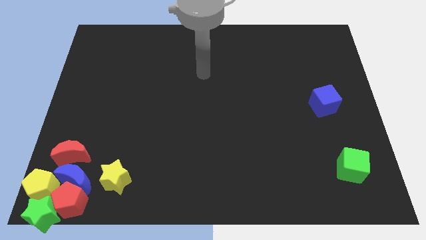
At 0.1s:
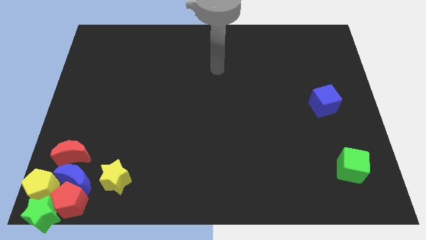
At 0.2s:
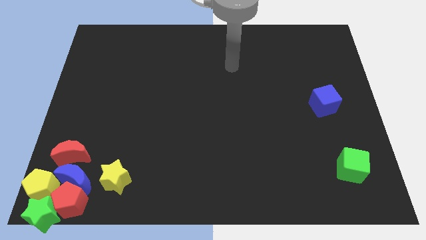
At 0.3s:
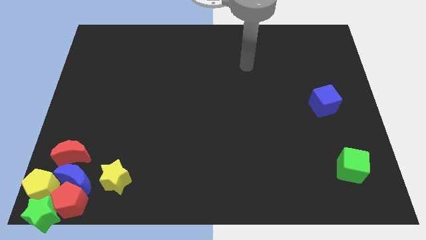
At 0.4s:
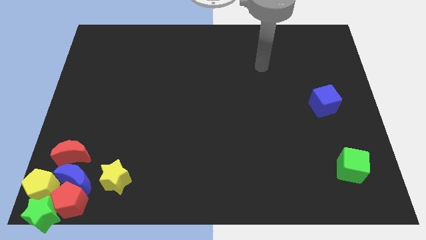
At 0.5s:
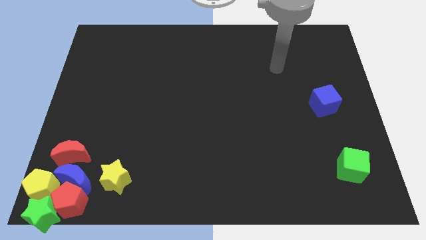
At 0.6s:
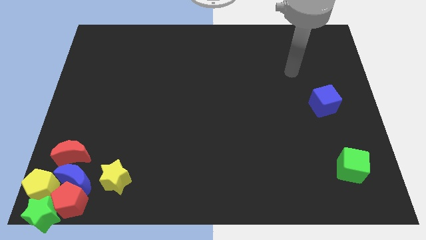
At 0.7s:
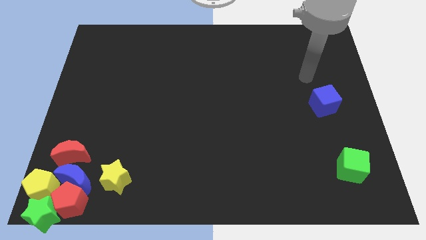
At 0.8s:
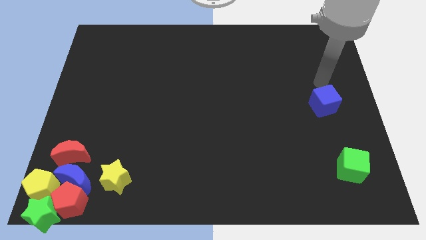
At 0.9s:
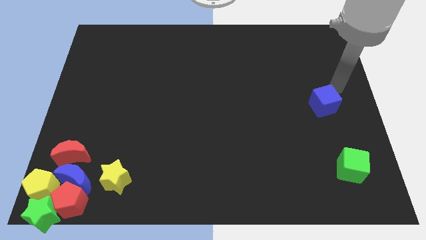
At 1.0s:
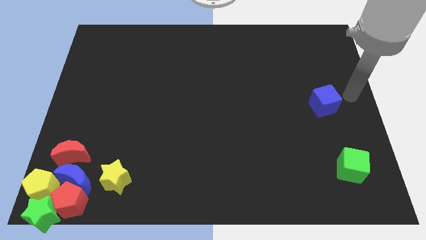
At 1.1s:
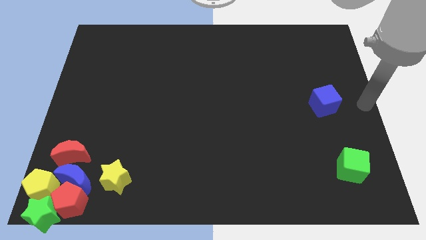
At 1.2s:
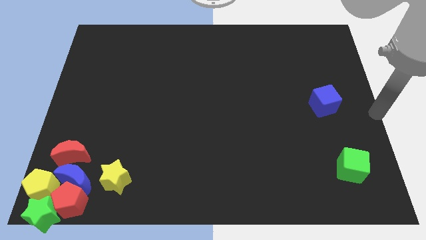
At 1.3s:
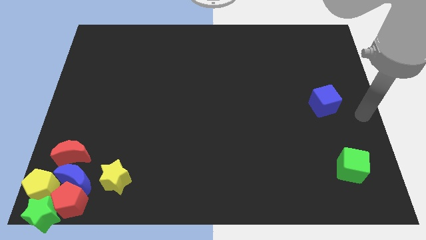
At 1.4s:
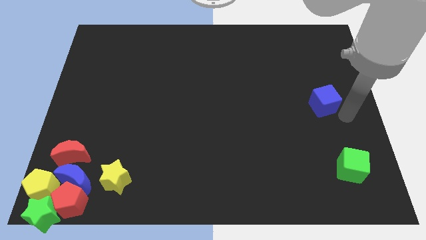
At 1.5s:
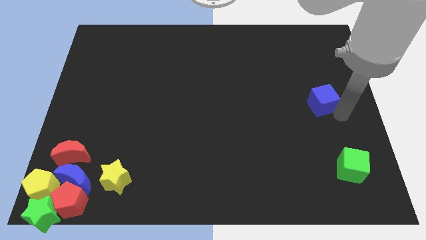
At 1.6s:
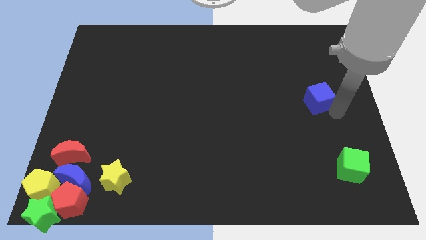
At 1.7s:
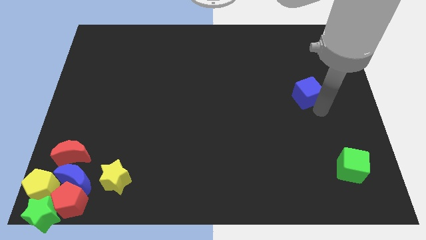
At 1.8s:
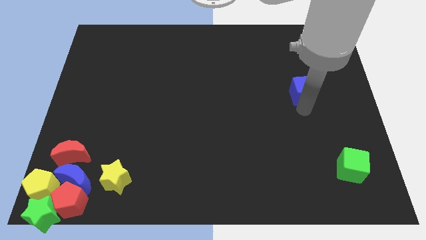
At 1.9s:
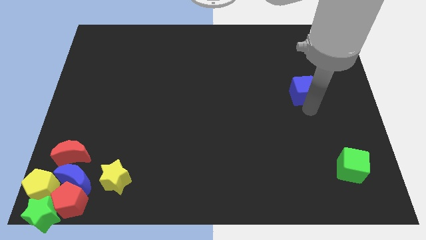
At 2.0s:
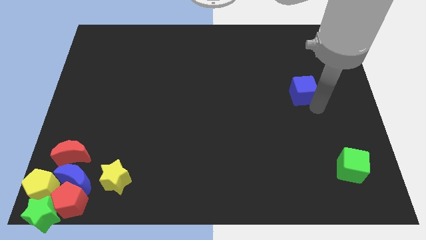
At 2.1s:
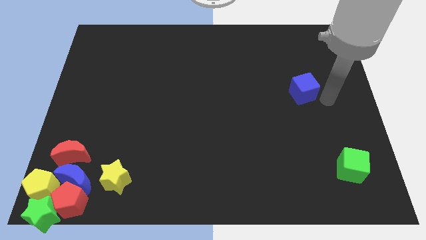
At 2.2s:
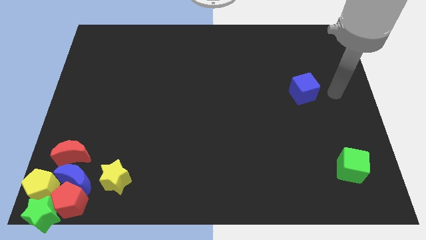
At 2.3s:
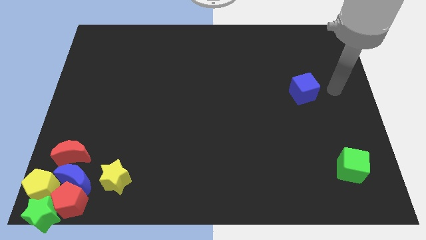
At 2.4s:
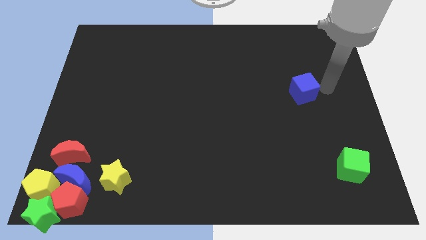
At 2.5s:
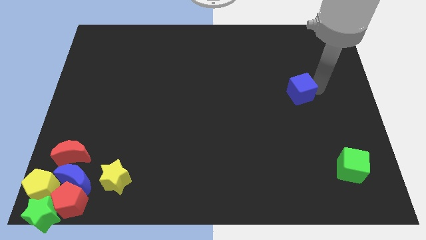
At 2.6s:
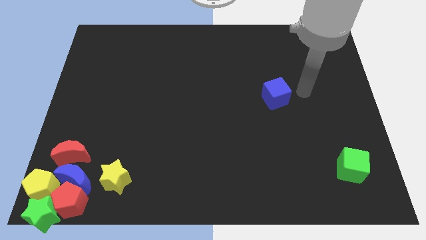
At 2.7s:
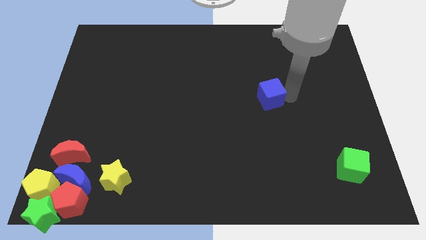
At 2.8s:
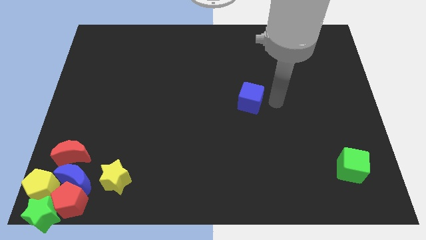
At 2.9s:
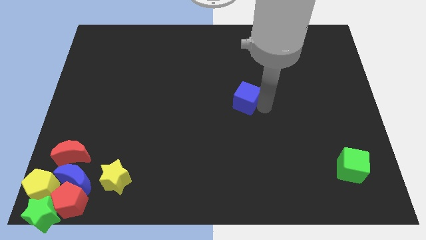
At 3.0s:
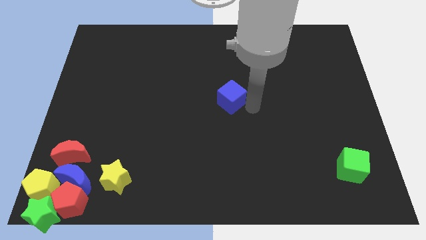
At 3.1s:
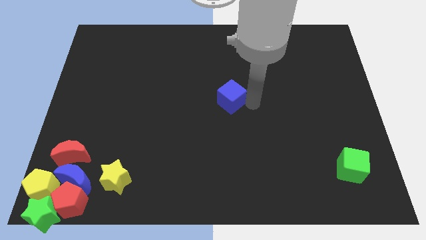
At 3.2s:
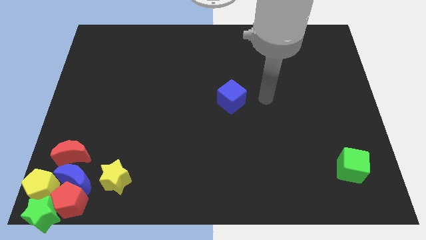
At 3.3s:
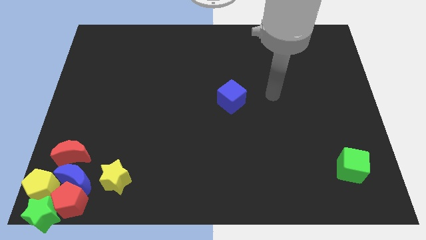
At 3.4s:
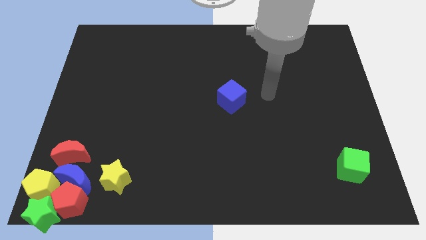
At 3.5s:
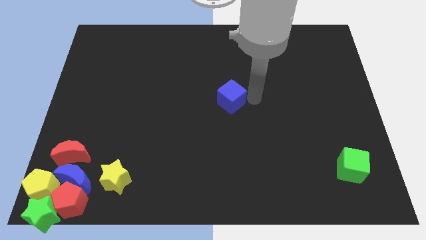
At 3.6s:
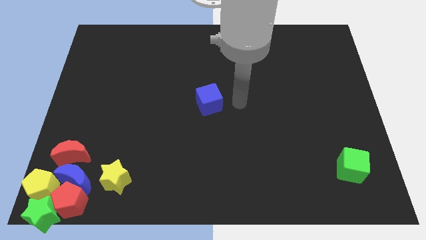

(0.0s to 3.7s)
push the blue cube to the center

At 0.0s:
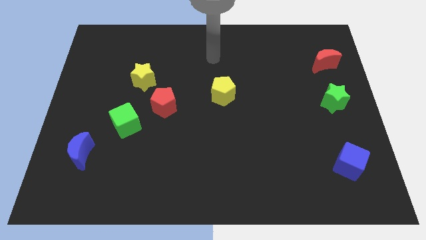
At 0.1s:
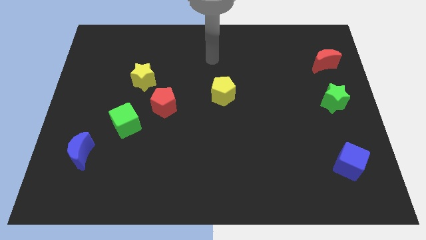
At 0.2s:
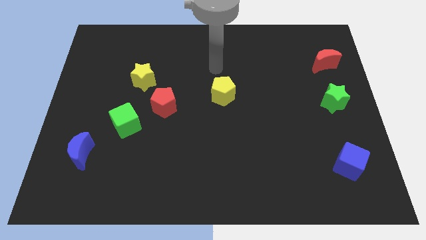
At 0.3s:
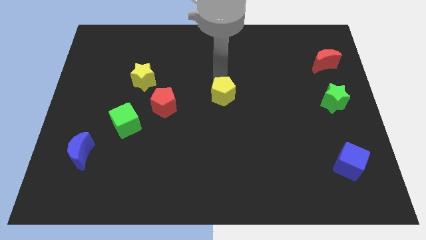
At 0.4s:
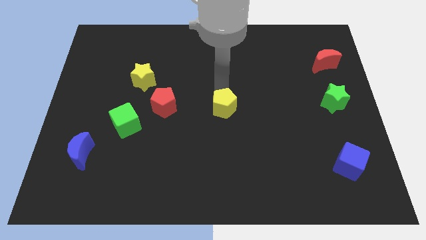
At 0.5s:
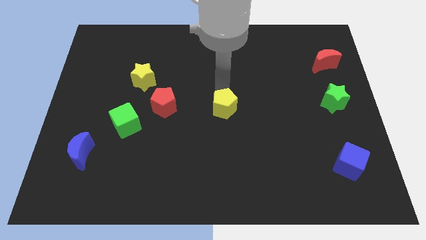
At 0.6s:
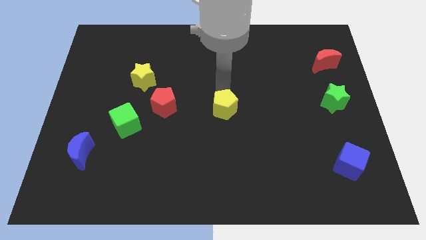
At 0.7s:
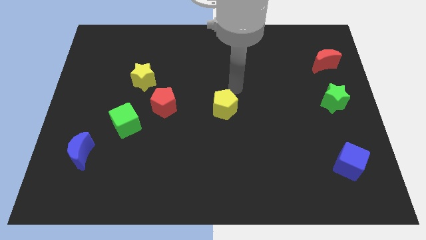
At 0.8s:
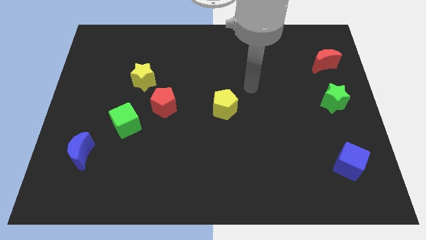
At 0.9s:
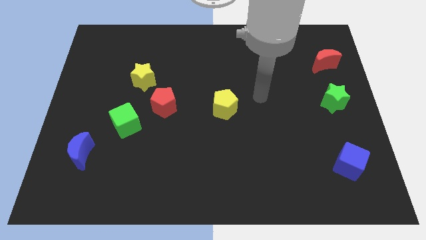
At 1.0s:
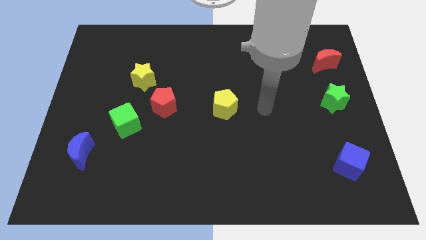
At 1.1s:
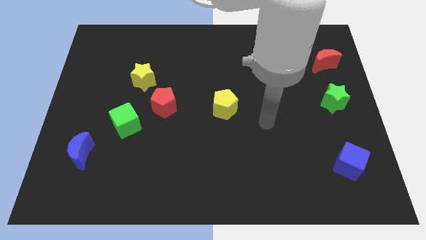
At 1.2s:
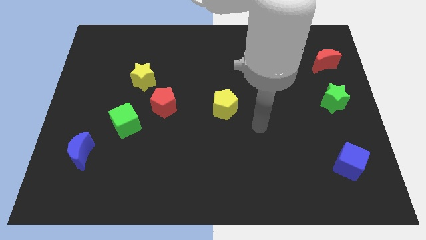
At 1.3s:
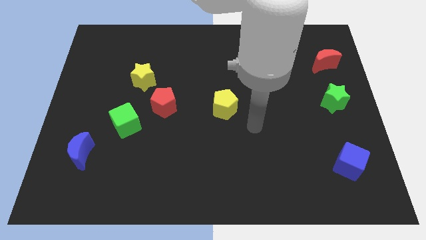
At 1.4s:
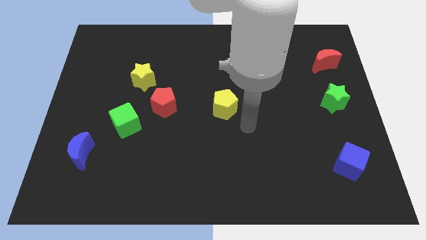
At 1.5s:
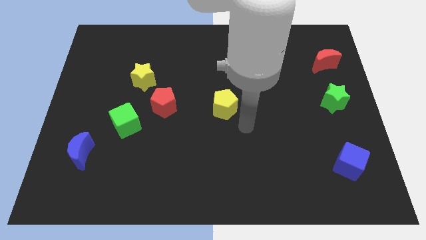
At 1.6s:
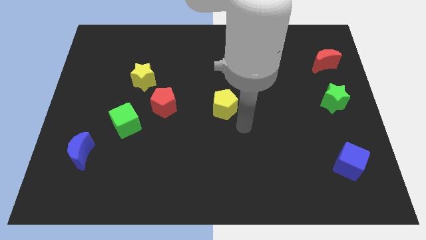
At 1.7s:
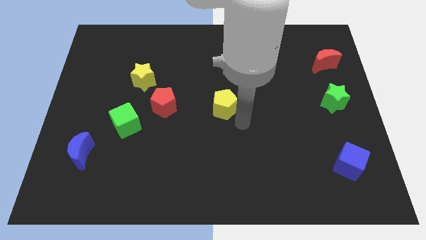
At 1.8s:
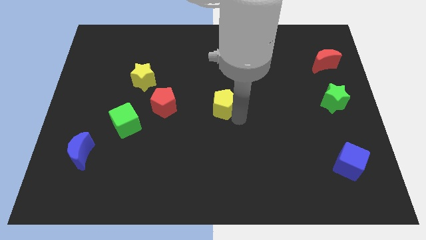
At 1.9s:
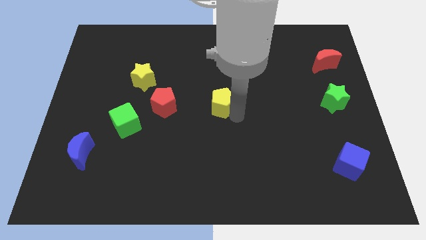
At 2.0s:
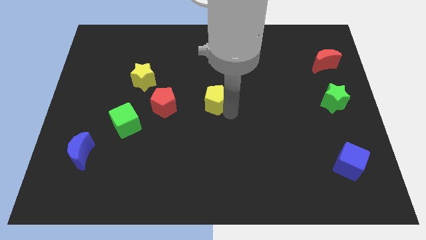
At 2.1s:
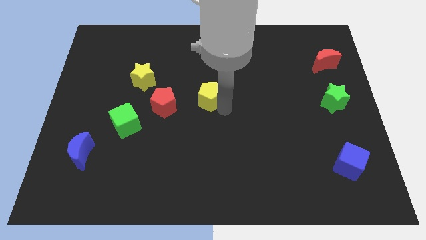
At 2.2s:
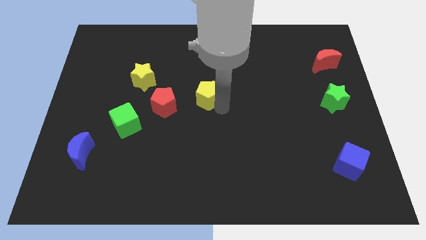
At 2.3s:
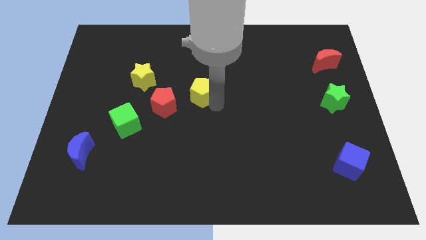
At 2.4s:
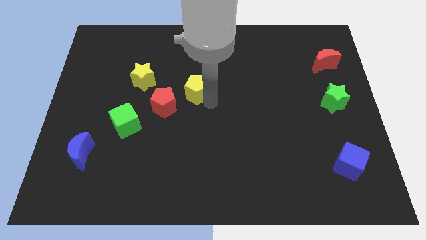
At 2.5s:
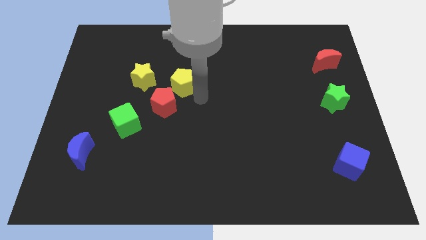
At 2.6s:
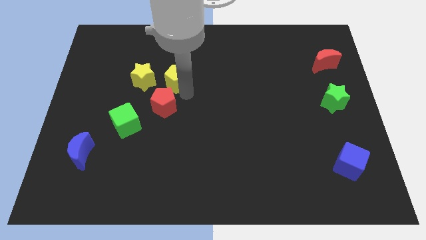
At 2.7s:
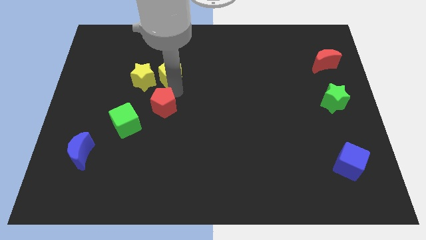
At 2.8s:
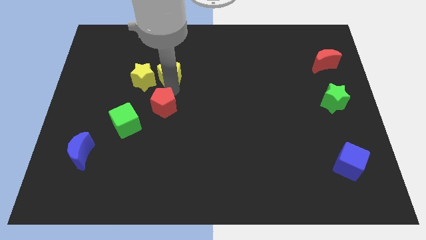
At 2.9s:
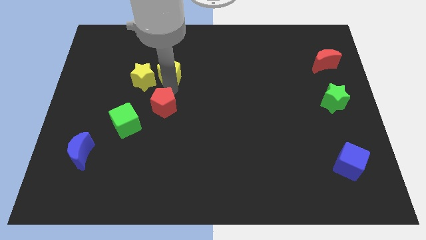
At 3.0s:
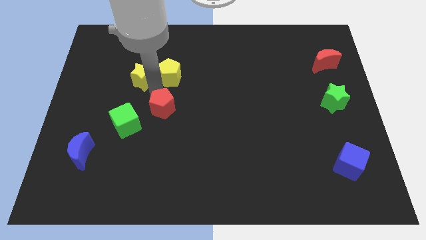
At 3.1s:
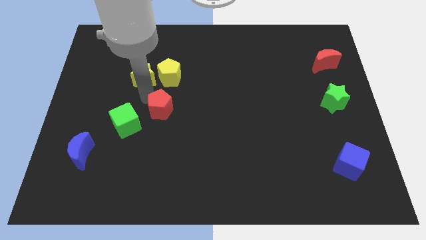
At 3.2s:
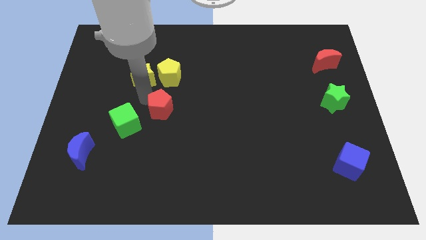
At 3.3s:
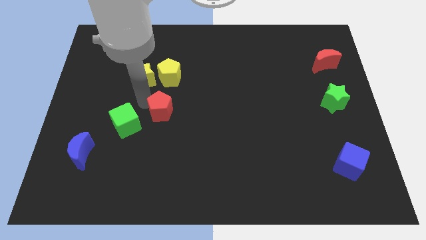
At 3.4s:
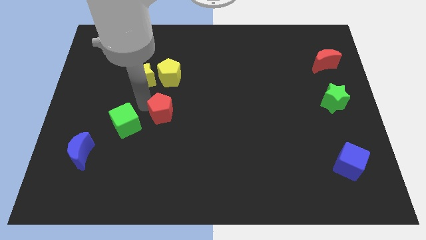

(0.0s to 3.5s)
move the yellow pentagon to the left

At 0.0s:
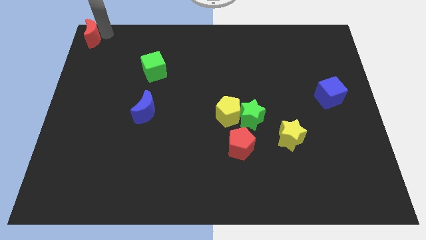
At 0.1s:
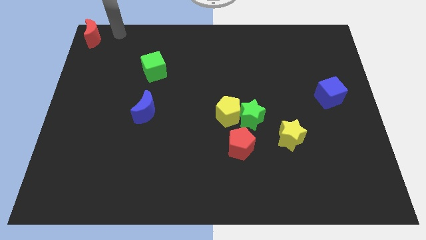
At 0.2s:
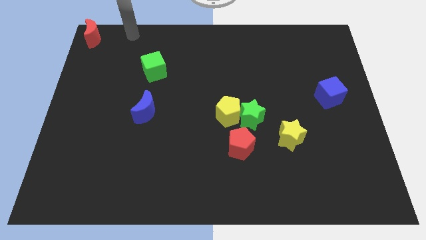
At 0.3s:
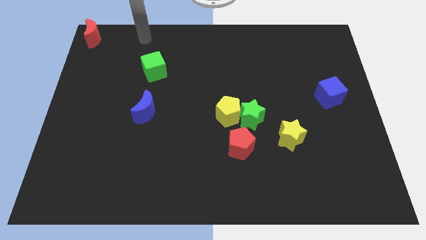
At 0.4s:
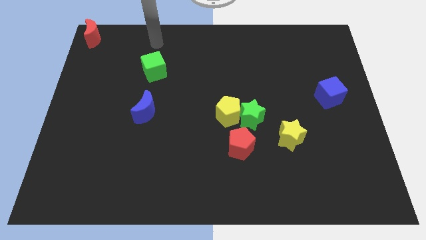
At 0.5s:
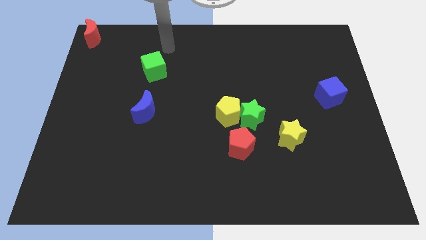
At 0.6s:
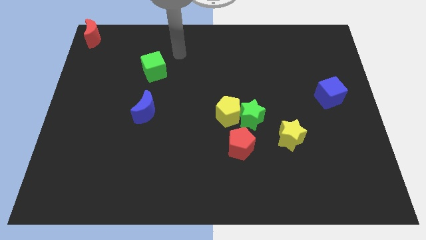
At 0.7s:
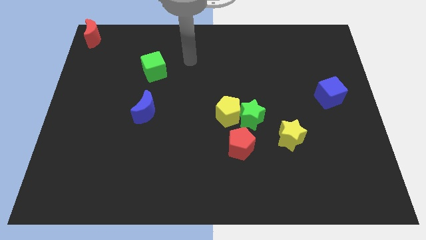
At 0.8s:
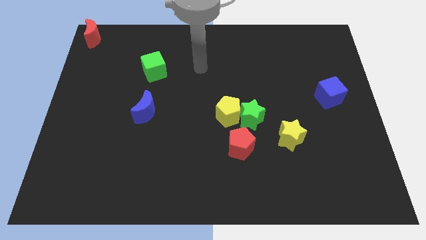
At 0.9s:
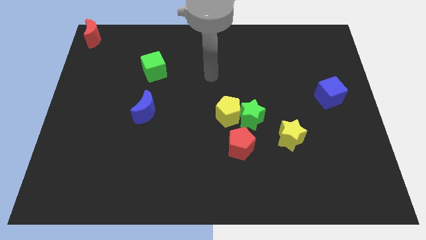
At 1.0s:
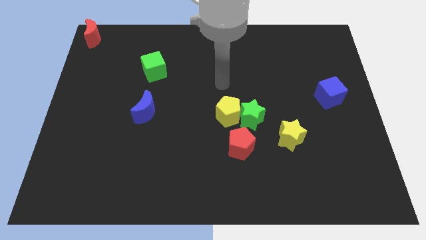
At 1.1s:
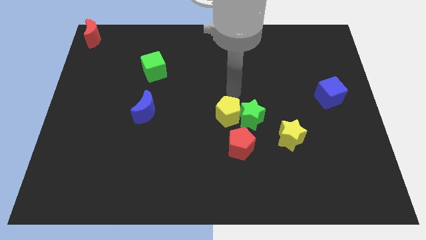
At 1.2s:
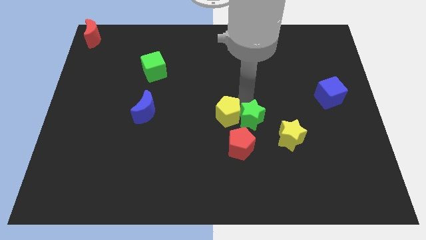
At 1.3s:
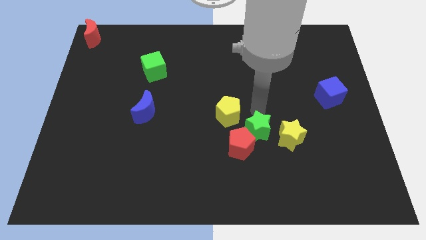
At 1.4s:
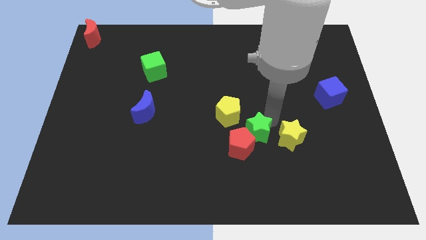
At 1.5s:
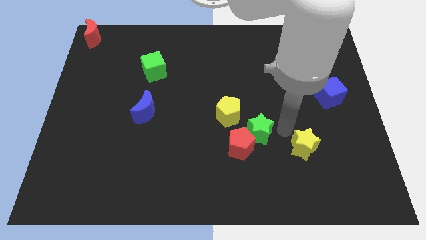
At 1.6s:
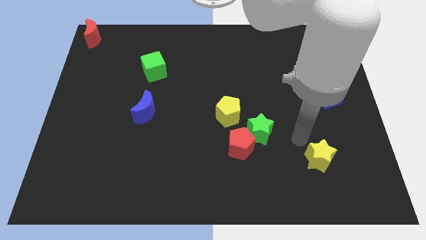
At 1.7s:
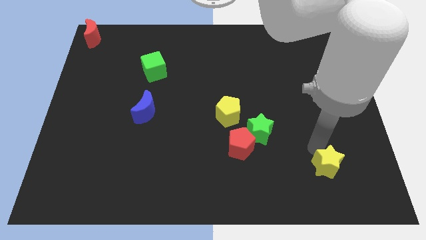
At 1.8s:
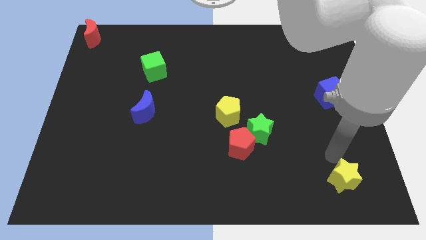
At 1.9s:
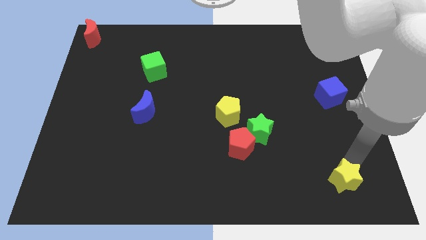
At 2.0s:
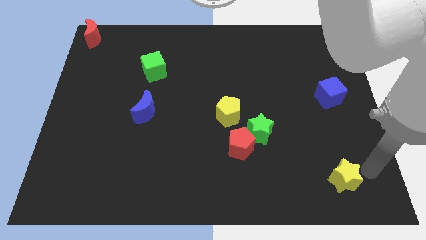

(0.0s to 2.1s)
place yellow star towards the bottom right of the board
